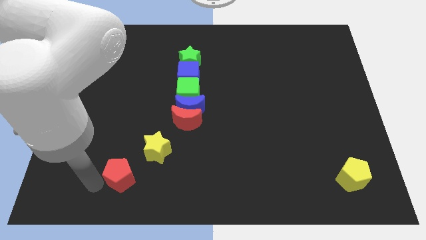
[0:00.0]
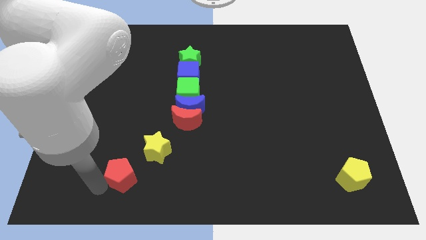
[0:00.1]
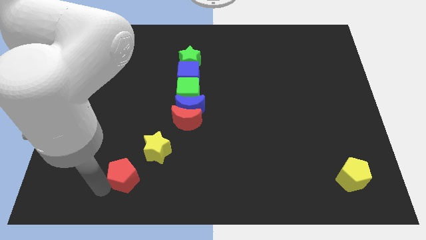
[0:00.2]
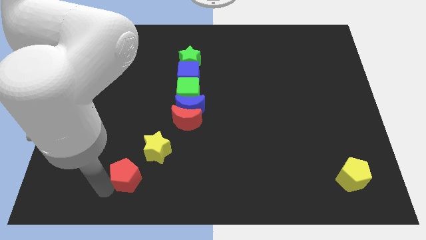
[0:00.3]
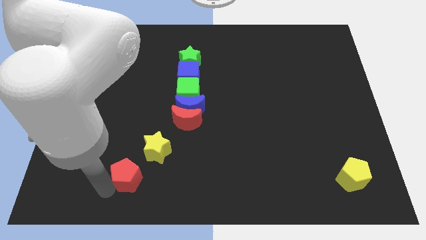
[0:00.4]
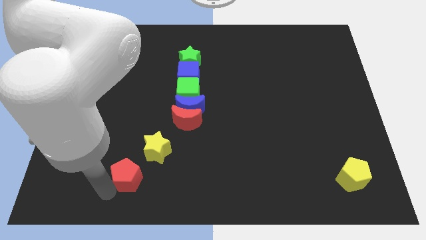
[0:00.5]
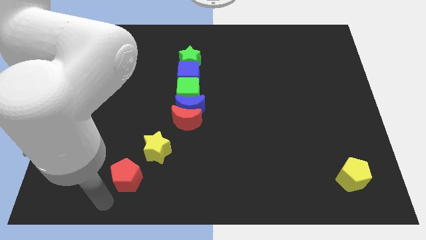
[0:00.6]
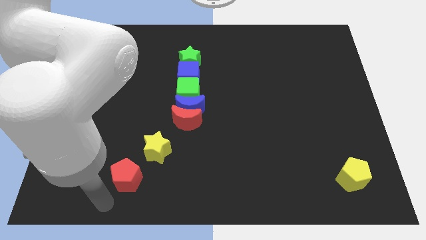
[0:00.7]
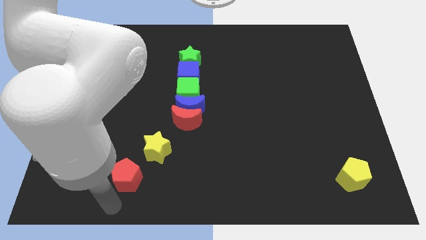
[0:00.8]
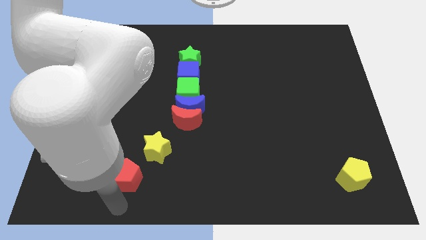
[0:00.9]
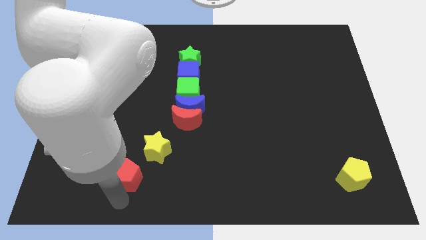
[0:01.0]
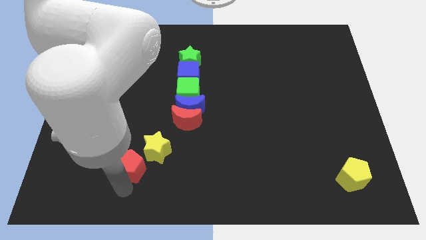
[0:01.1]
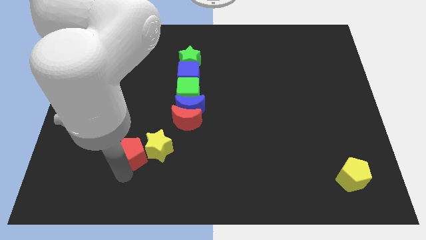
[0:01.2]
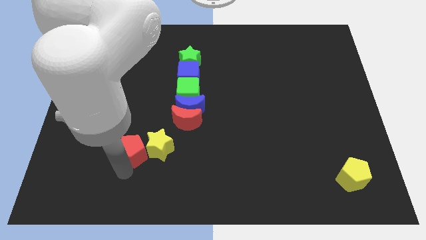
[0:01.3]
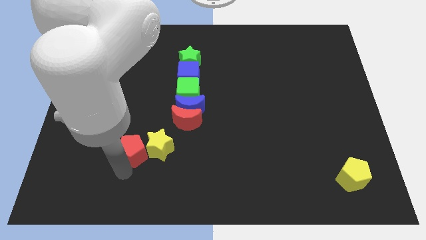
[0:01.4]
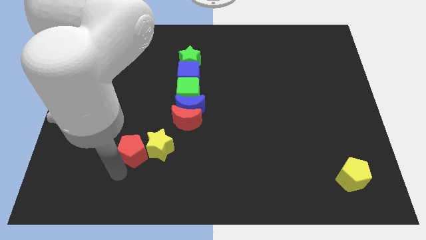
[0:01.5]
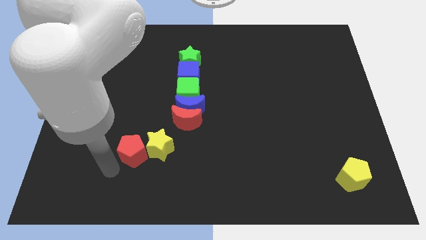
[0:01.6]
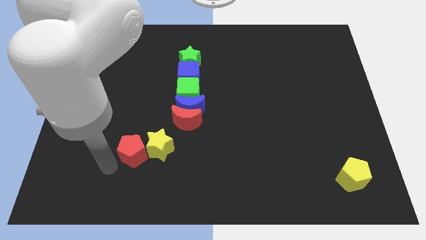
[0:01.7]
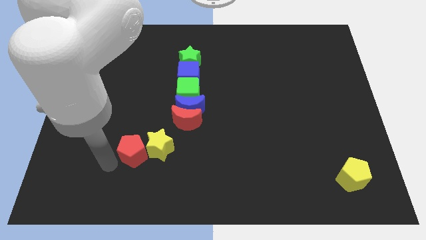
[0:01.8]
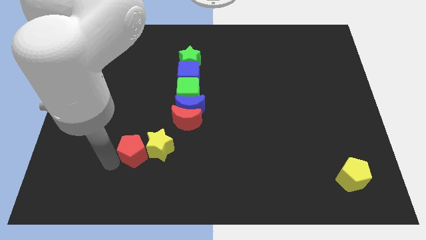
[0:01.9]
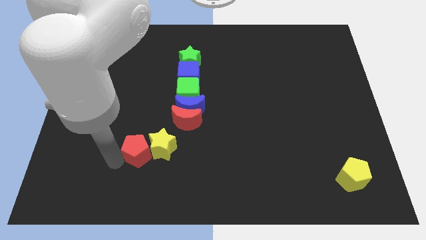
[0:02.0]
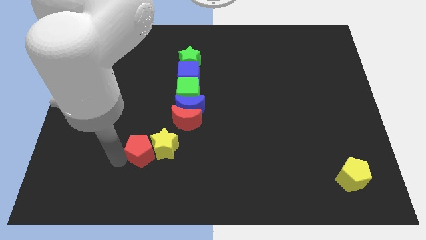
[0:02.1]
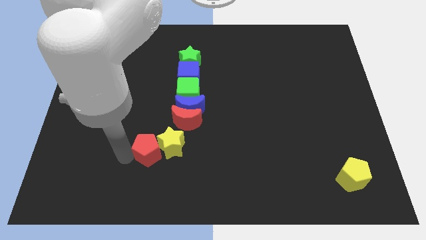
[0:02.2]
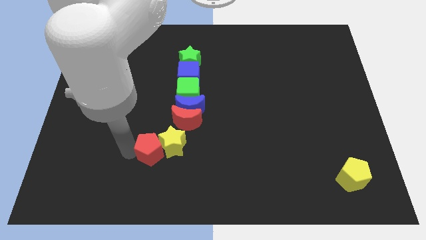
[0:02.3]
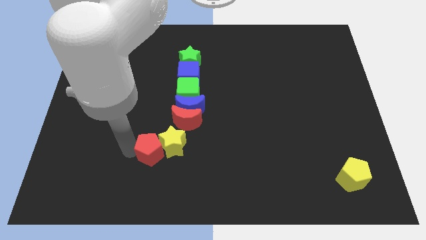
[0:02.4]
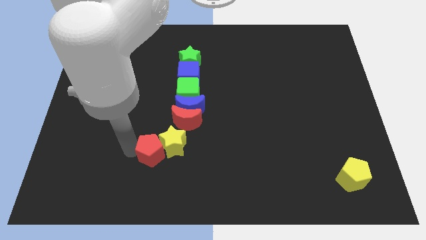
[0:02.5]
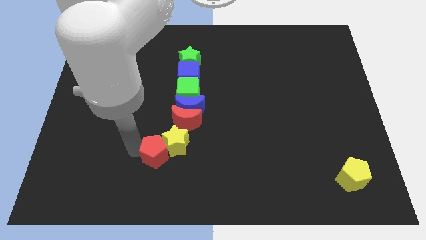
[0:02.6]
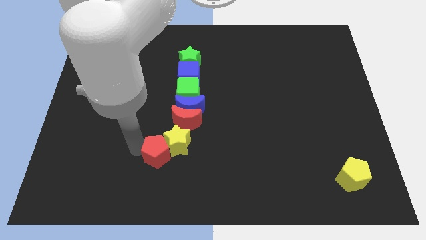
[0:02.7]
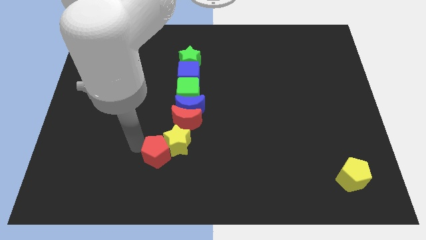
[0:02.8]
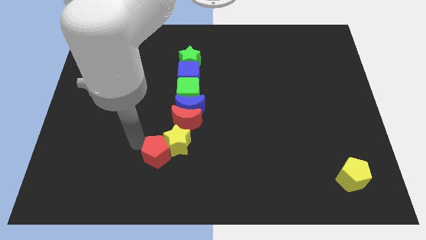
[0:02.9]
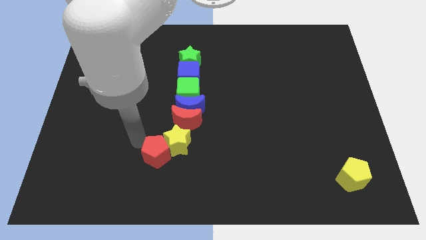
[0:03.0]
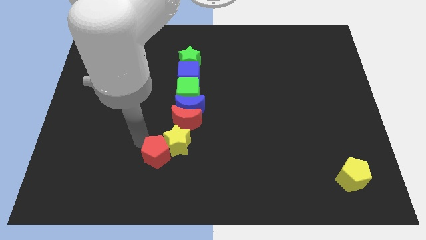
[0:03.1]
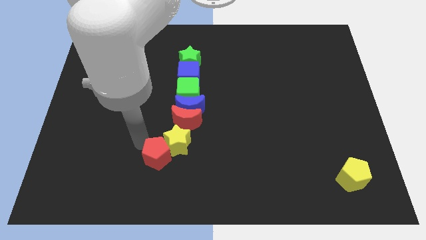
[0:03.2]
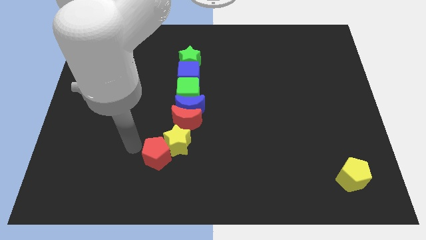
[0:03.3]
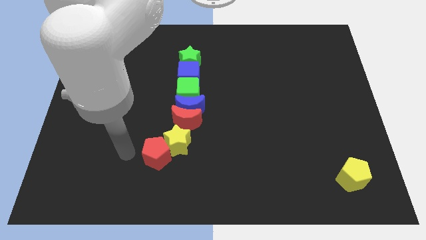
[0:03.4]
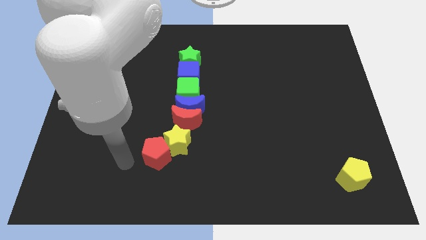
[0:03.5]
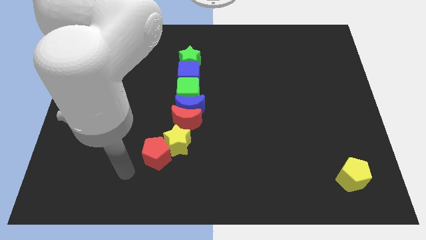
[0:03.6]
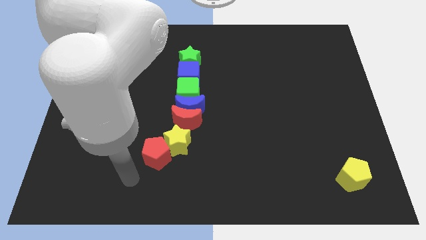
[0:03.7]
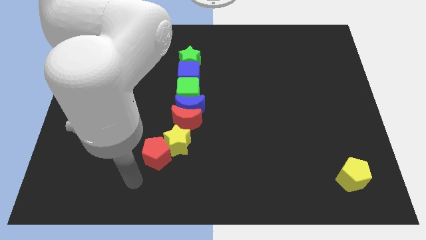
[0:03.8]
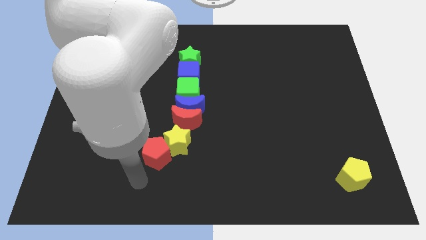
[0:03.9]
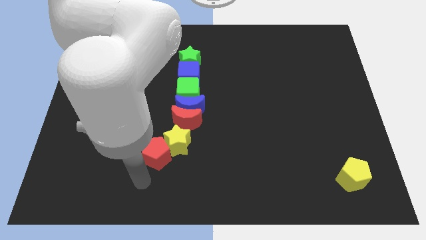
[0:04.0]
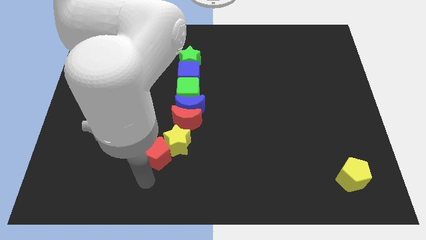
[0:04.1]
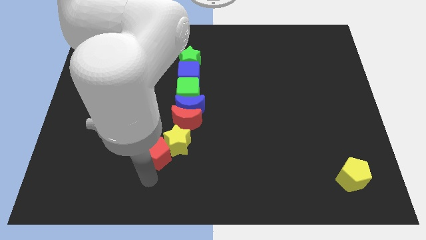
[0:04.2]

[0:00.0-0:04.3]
place the red pentagon to the left of the yellow star

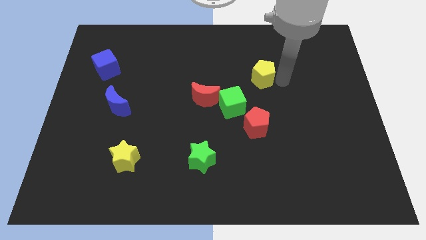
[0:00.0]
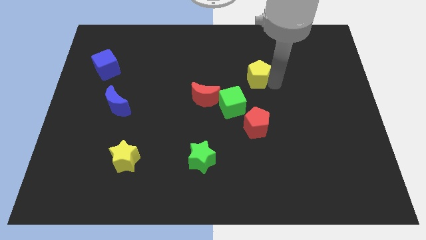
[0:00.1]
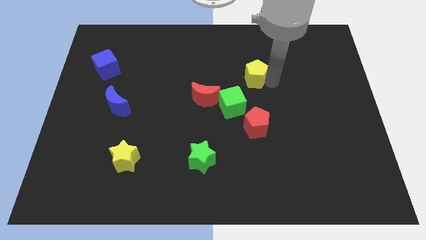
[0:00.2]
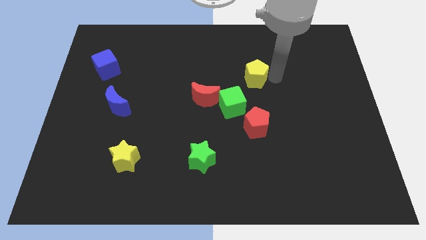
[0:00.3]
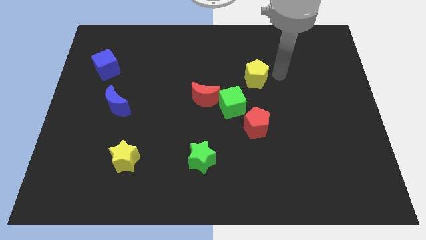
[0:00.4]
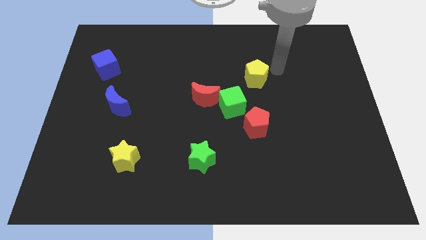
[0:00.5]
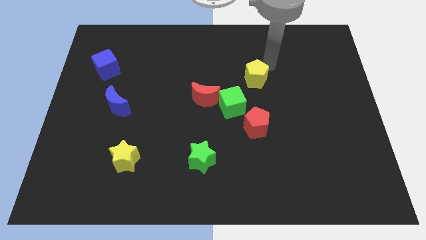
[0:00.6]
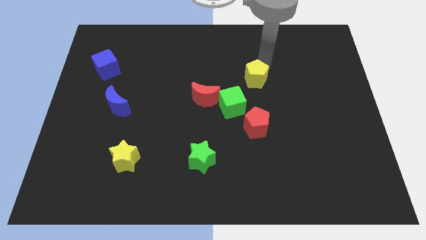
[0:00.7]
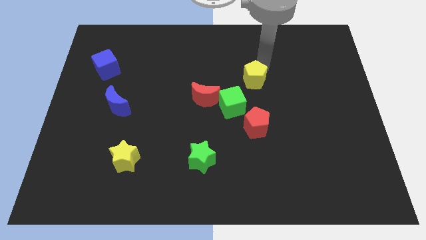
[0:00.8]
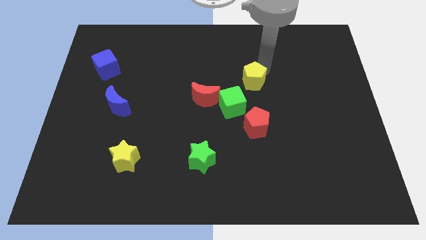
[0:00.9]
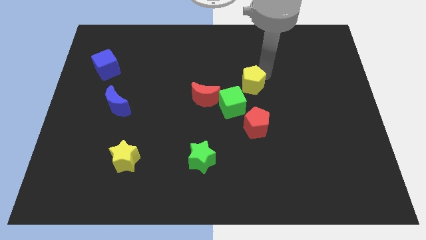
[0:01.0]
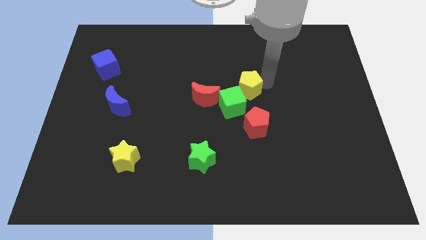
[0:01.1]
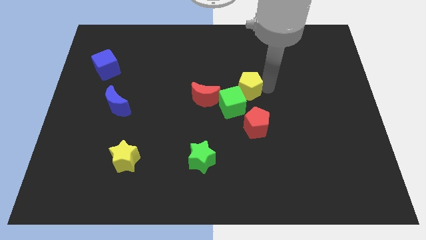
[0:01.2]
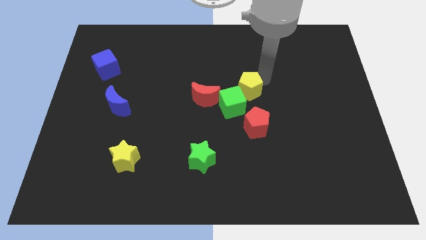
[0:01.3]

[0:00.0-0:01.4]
move the yellow pentagon parallel to the top of the red pentagon

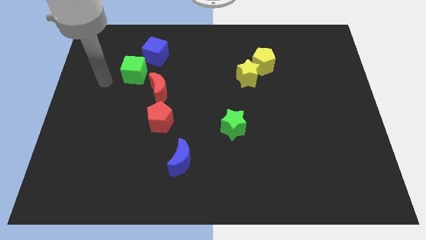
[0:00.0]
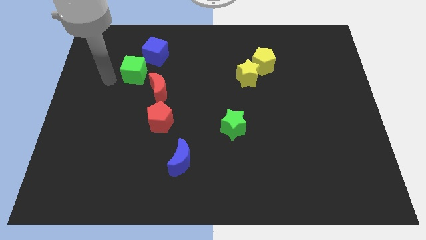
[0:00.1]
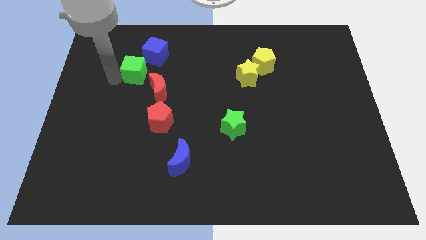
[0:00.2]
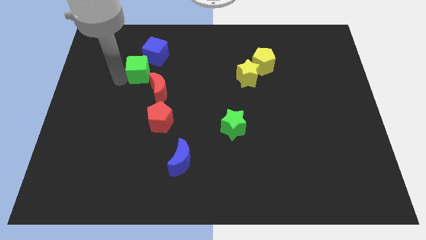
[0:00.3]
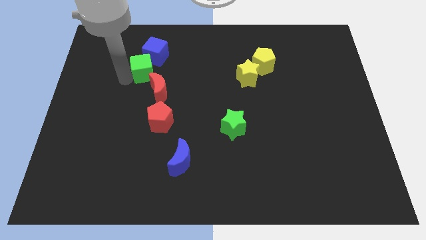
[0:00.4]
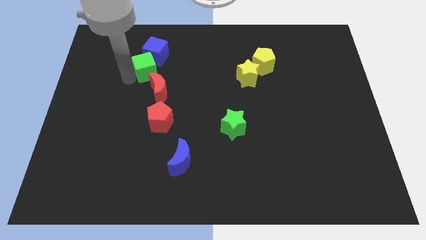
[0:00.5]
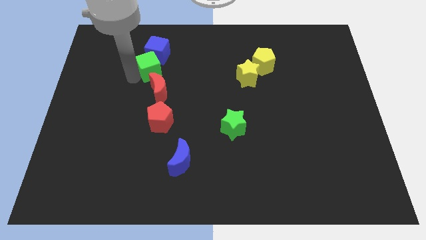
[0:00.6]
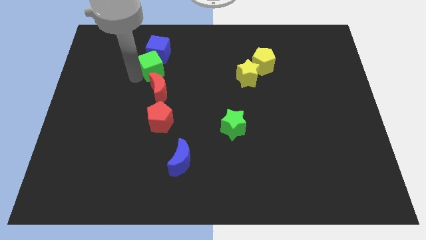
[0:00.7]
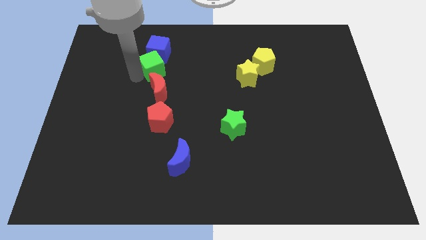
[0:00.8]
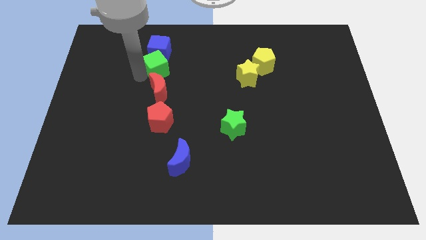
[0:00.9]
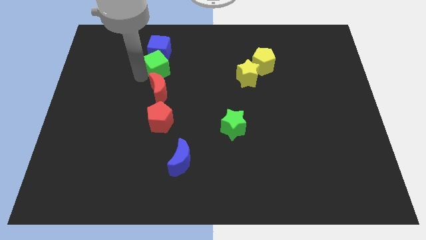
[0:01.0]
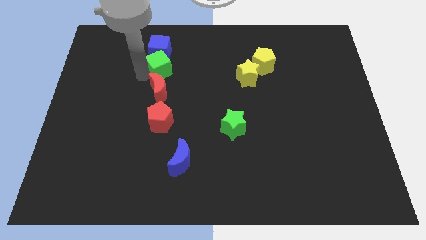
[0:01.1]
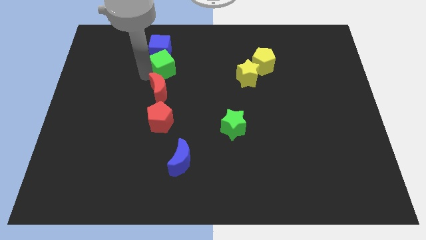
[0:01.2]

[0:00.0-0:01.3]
place the green cube at the top of the red crescent

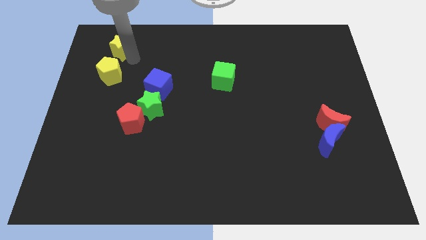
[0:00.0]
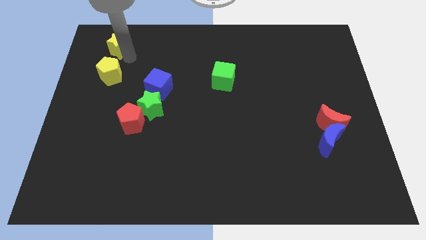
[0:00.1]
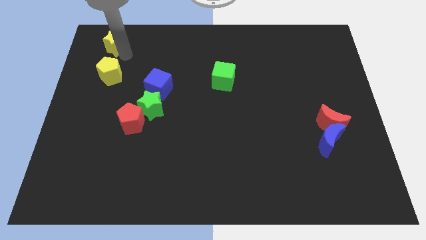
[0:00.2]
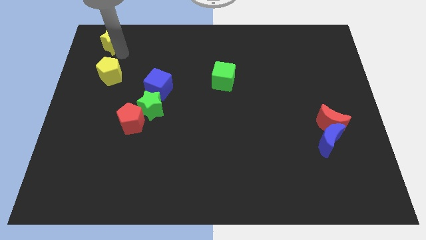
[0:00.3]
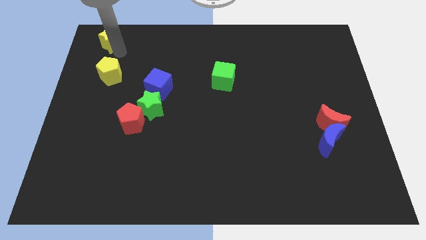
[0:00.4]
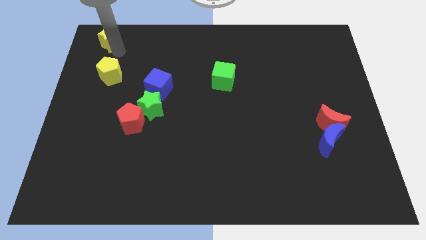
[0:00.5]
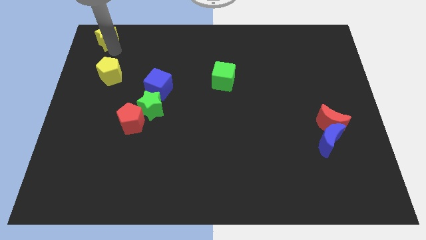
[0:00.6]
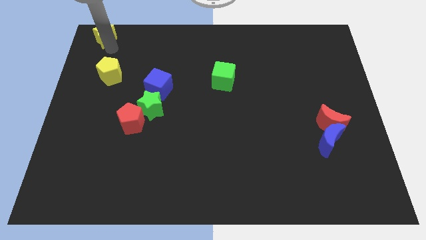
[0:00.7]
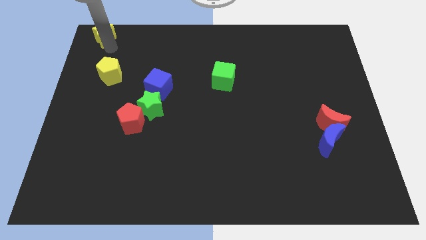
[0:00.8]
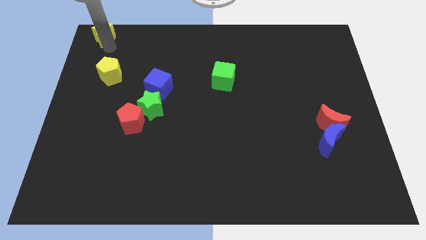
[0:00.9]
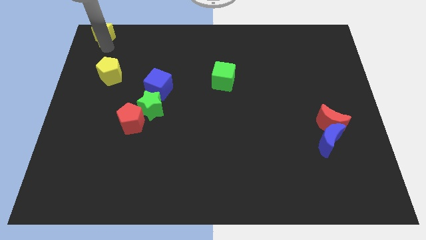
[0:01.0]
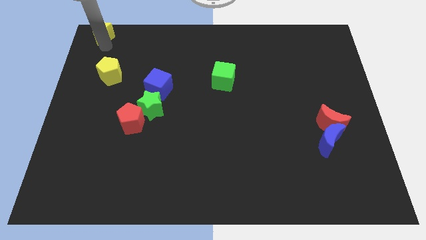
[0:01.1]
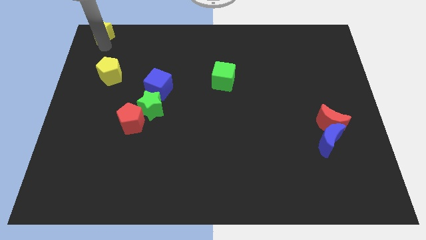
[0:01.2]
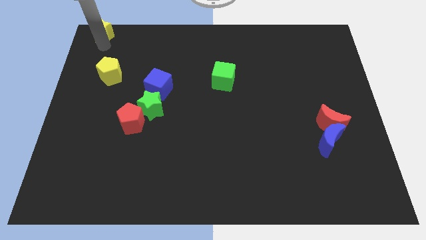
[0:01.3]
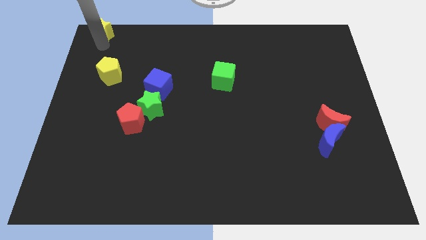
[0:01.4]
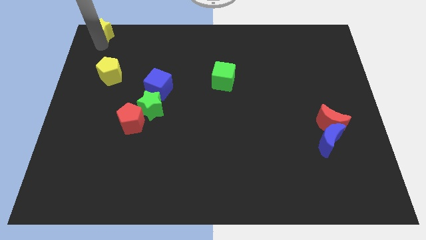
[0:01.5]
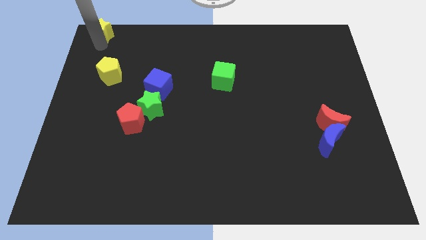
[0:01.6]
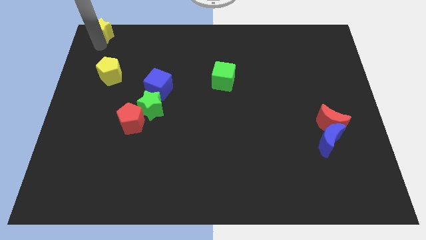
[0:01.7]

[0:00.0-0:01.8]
place yellow star to the top left corner of the board

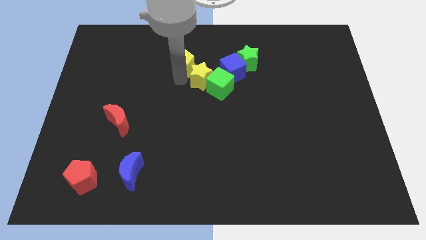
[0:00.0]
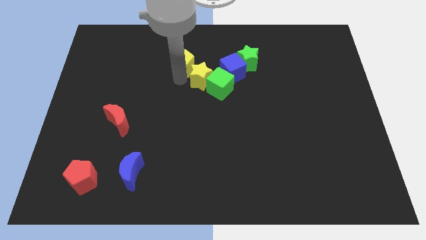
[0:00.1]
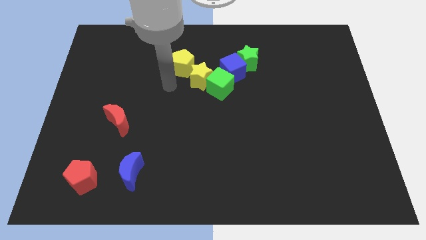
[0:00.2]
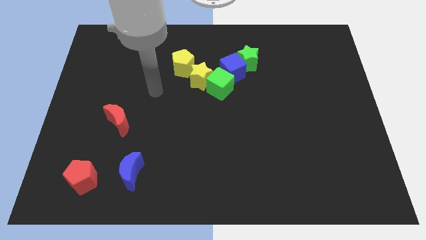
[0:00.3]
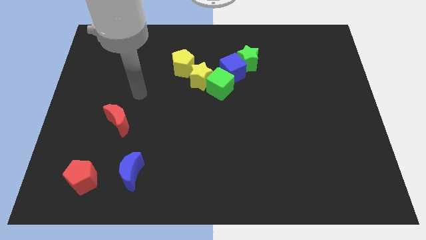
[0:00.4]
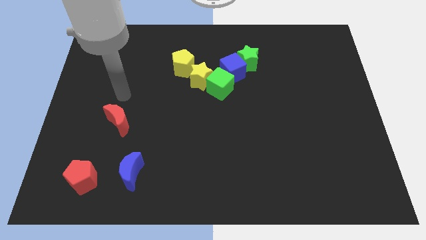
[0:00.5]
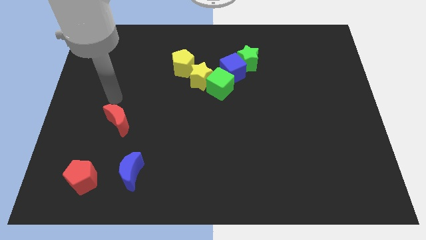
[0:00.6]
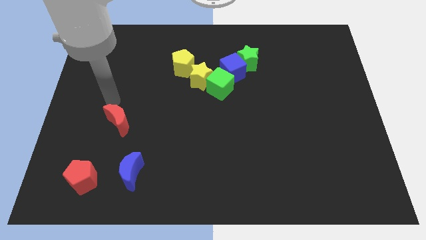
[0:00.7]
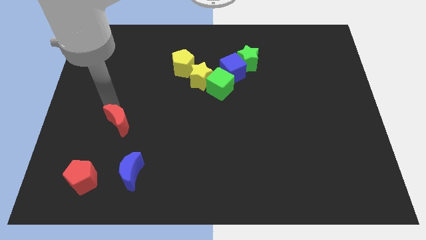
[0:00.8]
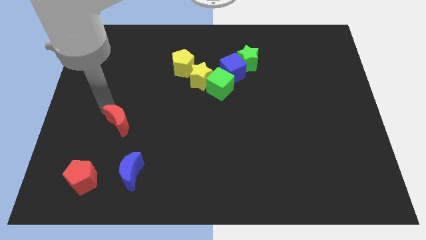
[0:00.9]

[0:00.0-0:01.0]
place your arm to the top of the red moon
